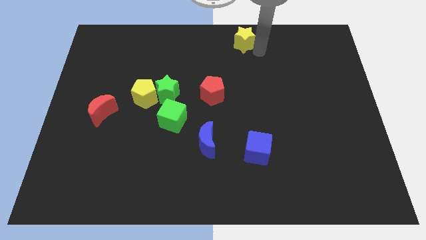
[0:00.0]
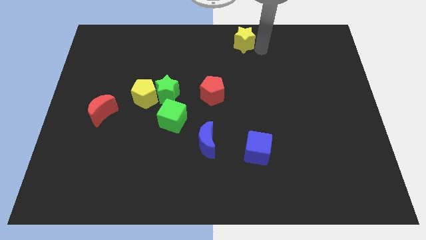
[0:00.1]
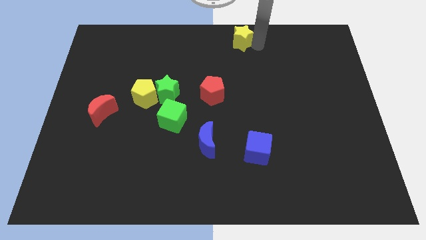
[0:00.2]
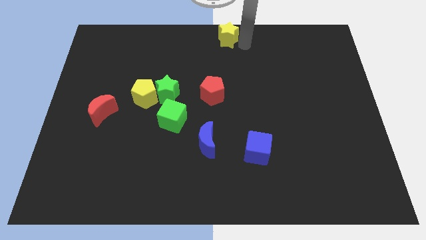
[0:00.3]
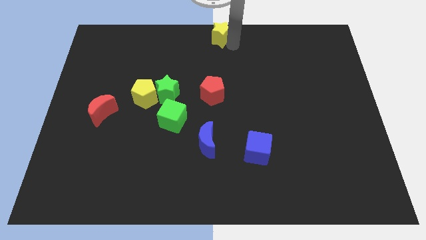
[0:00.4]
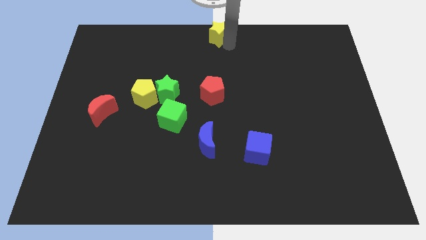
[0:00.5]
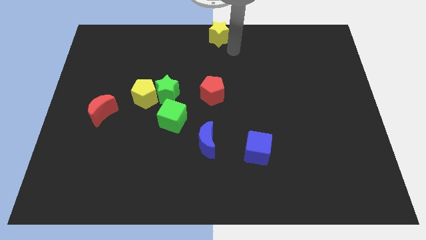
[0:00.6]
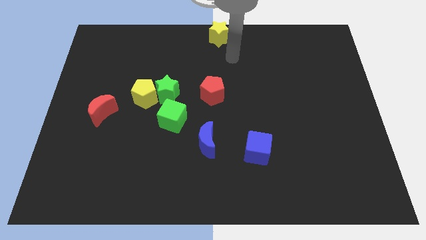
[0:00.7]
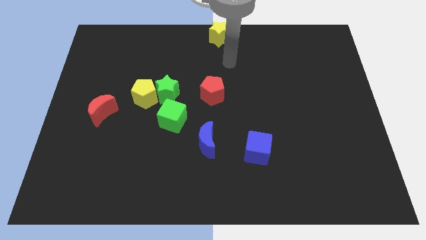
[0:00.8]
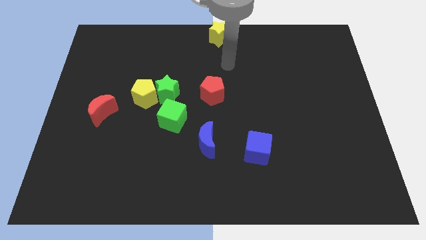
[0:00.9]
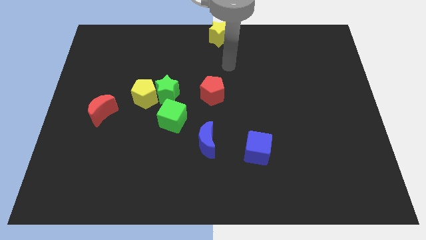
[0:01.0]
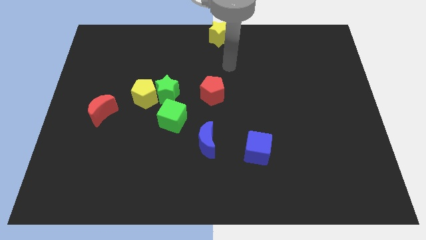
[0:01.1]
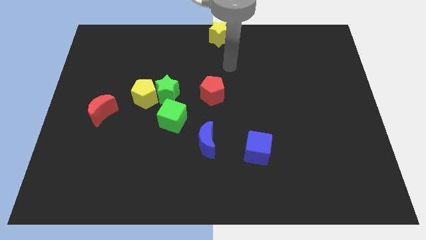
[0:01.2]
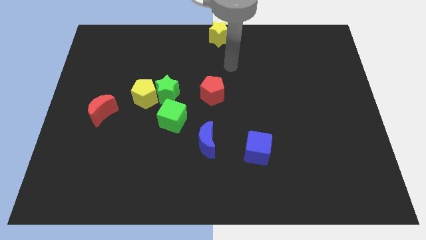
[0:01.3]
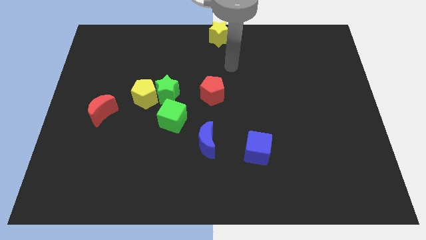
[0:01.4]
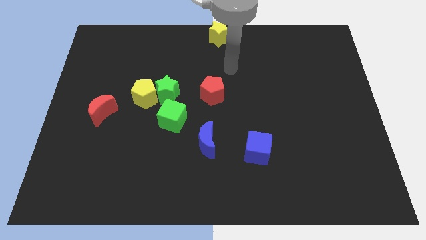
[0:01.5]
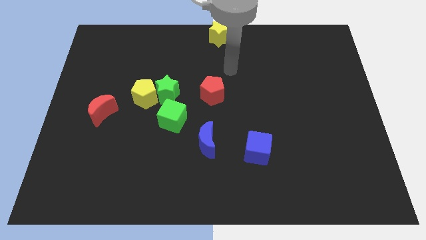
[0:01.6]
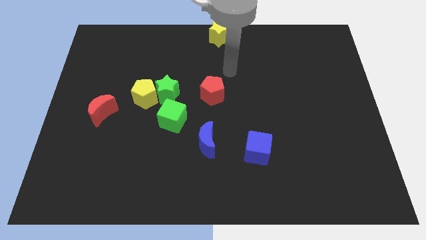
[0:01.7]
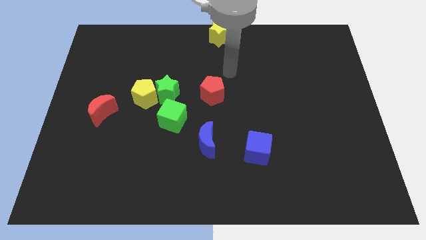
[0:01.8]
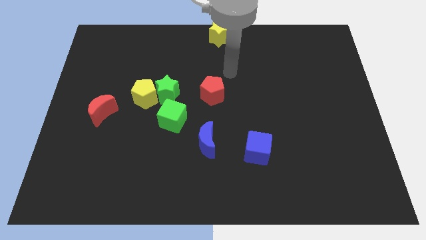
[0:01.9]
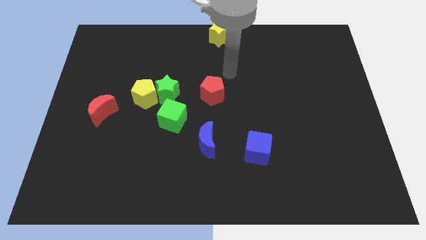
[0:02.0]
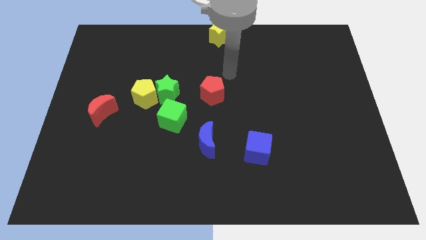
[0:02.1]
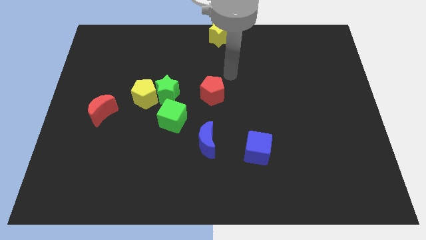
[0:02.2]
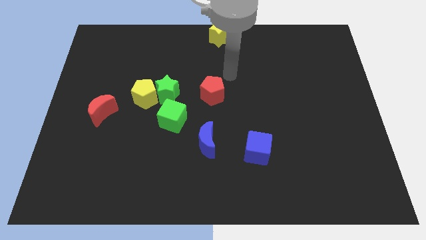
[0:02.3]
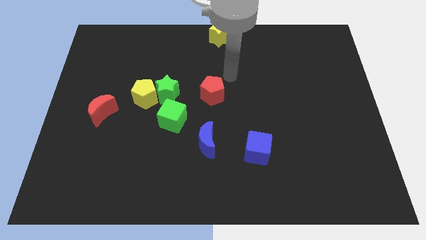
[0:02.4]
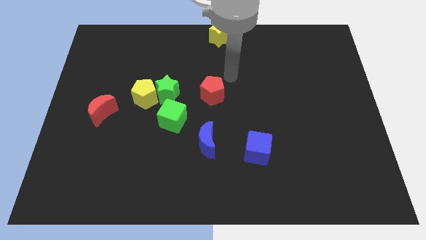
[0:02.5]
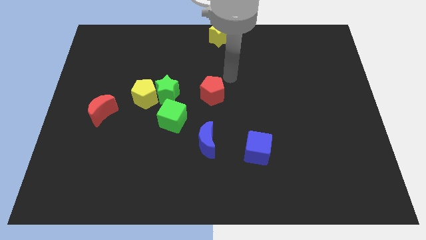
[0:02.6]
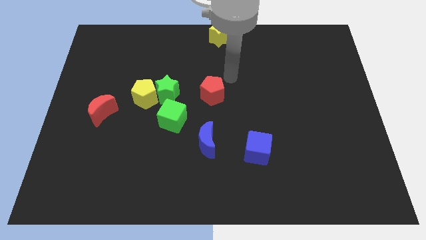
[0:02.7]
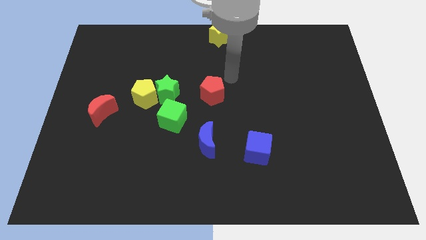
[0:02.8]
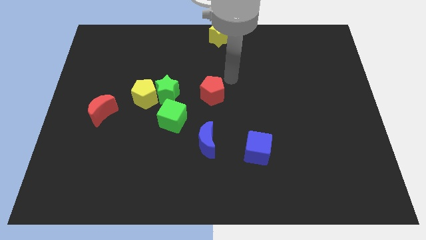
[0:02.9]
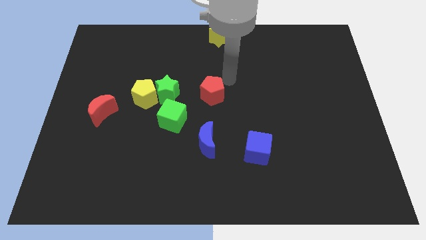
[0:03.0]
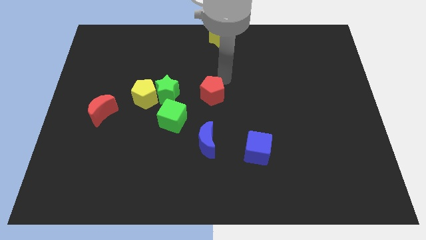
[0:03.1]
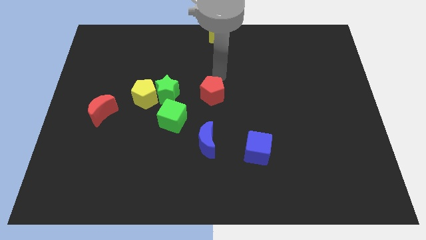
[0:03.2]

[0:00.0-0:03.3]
push yellow star towards its left

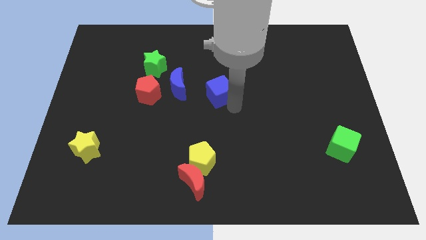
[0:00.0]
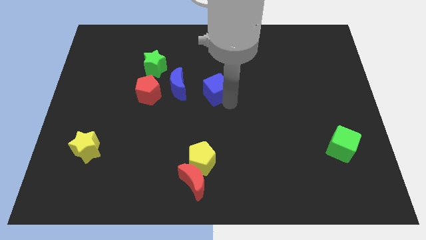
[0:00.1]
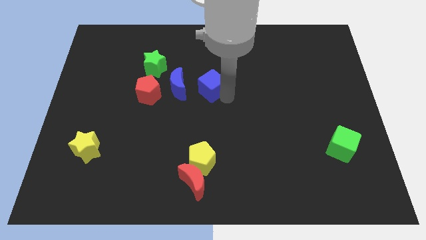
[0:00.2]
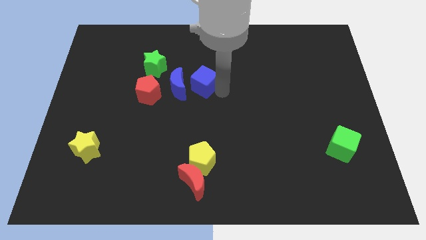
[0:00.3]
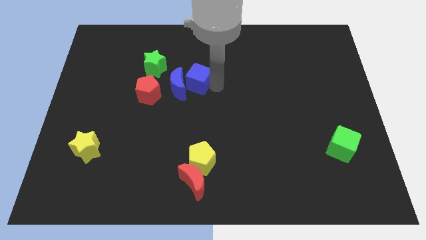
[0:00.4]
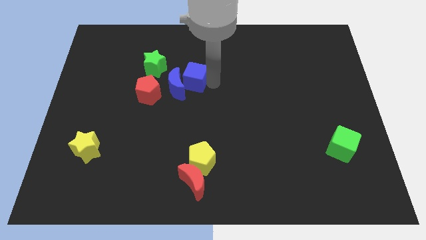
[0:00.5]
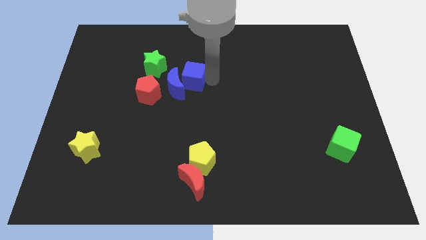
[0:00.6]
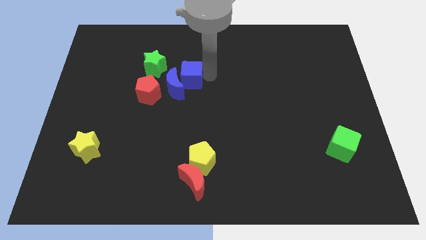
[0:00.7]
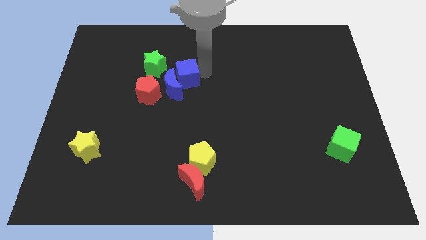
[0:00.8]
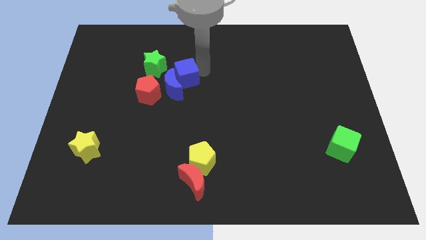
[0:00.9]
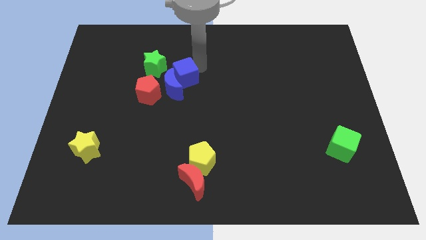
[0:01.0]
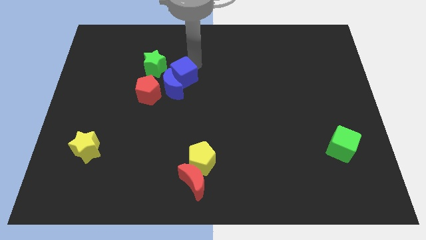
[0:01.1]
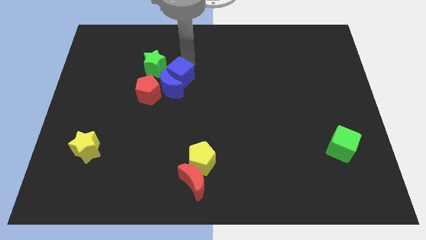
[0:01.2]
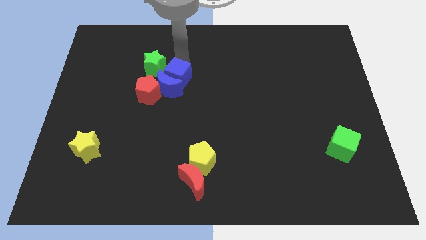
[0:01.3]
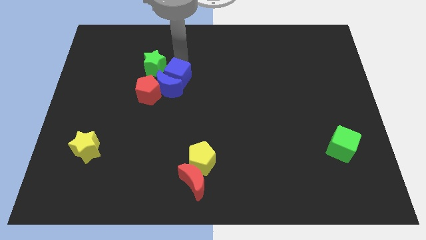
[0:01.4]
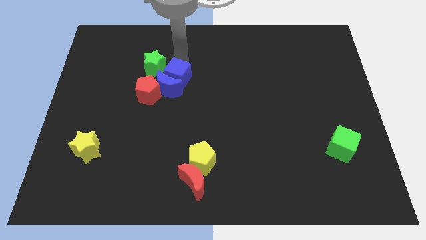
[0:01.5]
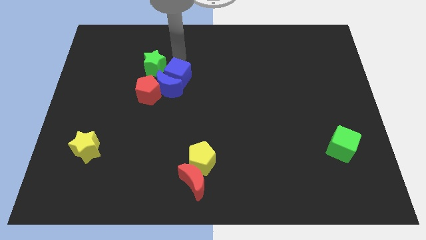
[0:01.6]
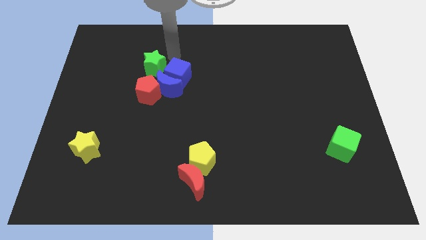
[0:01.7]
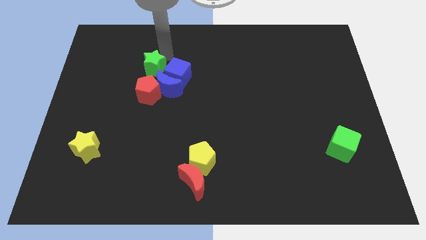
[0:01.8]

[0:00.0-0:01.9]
place the blue cube on top of blue moon

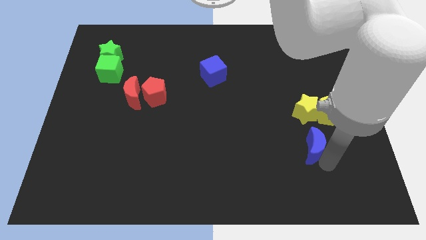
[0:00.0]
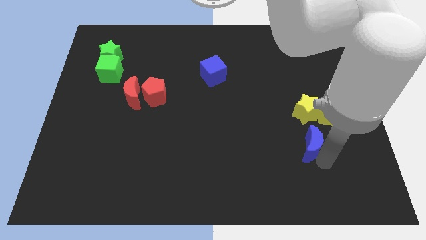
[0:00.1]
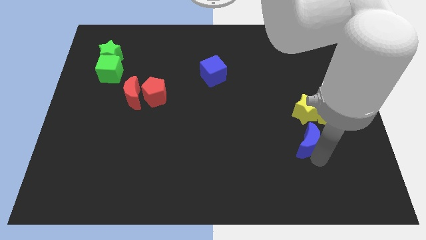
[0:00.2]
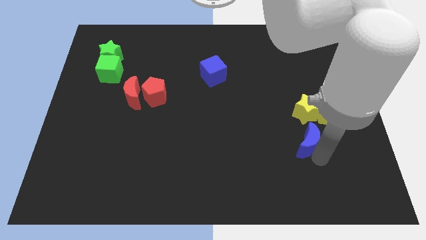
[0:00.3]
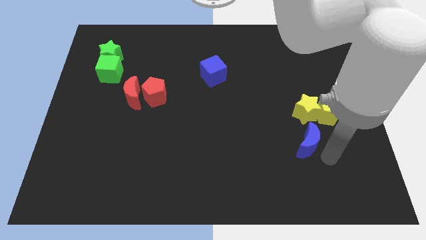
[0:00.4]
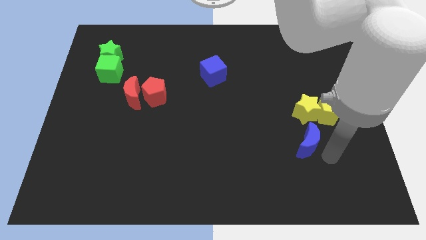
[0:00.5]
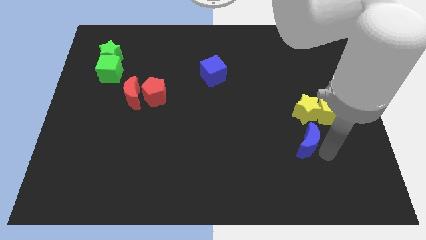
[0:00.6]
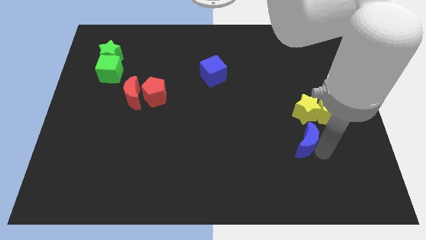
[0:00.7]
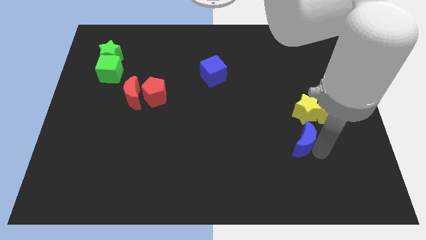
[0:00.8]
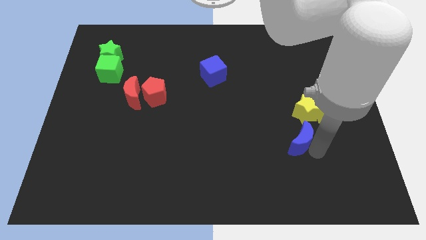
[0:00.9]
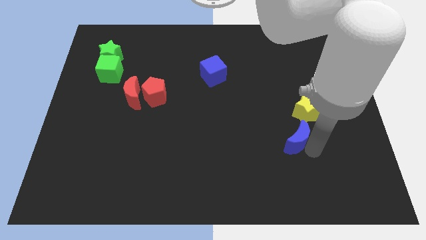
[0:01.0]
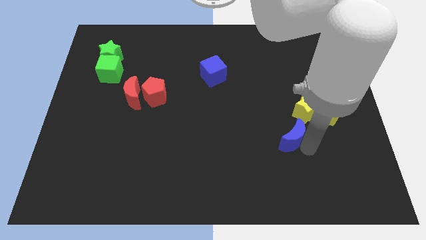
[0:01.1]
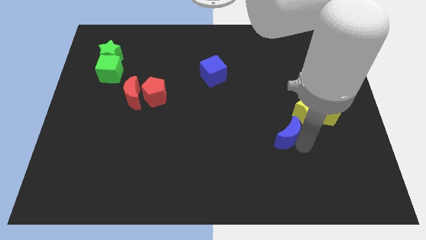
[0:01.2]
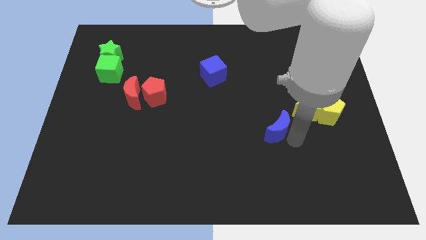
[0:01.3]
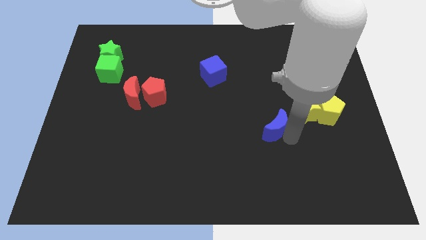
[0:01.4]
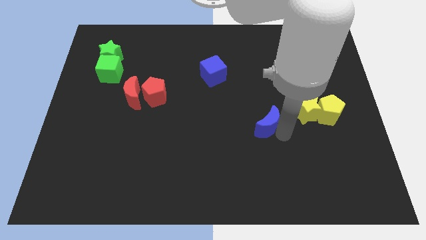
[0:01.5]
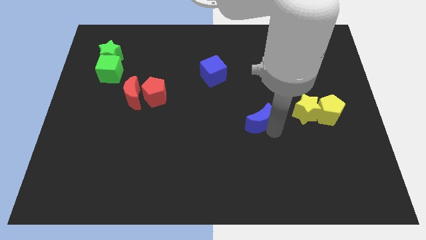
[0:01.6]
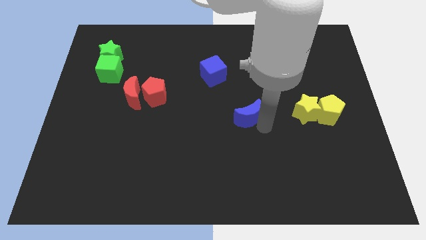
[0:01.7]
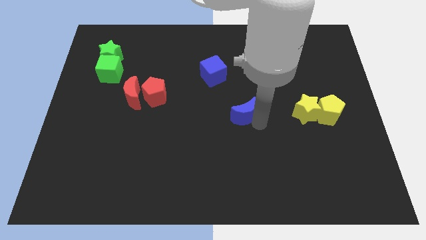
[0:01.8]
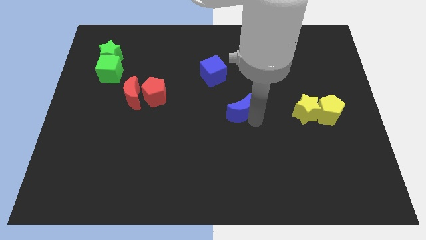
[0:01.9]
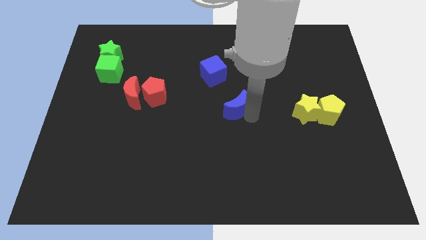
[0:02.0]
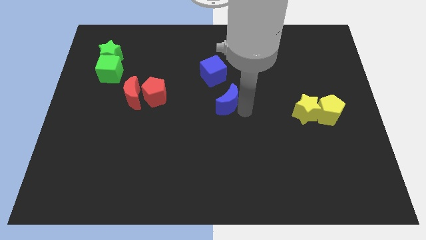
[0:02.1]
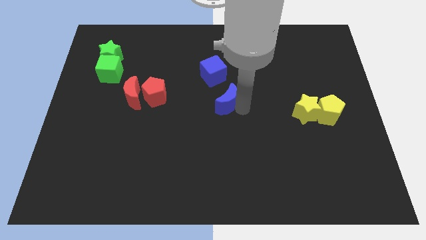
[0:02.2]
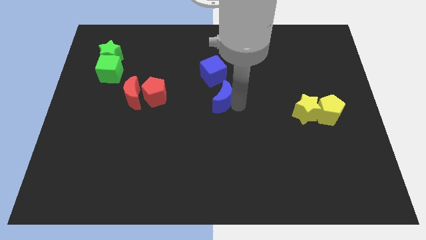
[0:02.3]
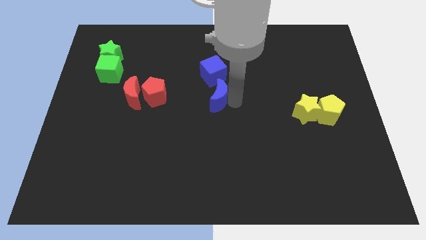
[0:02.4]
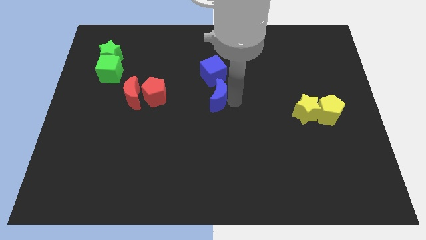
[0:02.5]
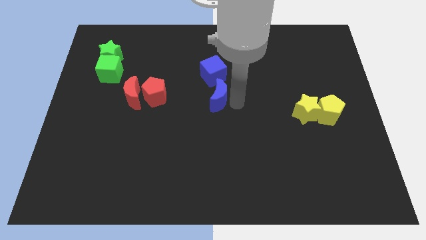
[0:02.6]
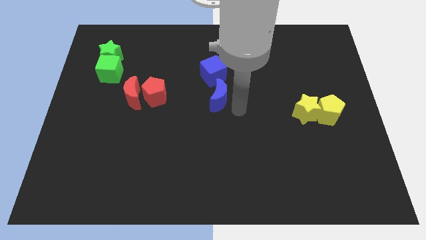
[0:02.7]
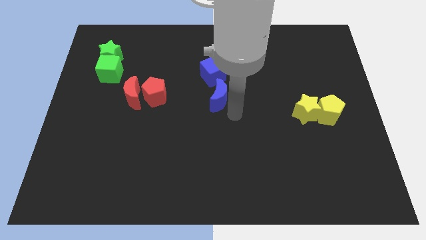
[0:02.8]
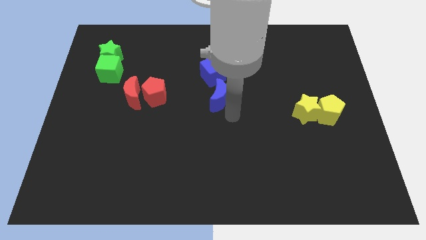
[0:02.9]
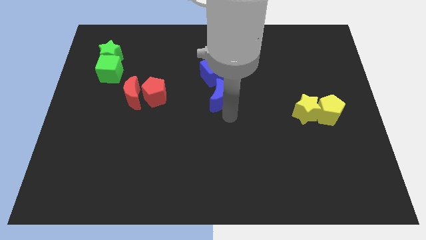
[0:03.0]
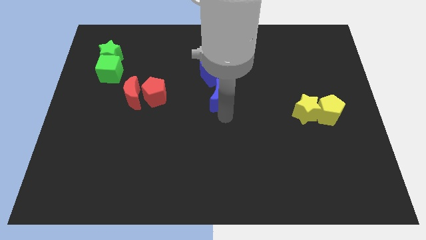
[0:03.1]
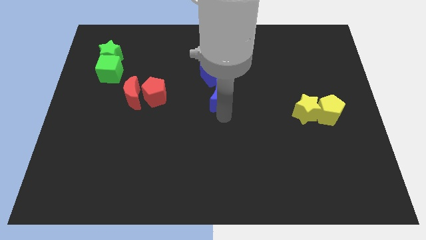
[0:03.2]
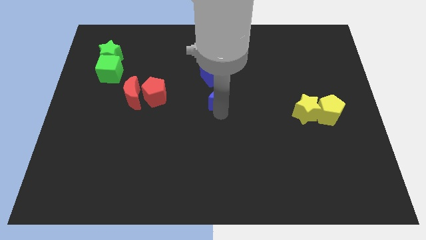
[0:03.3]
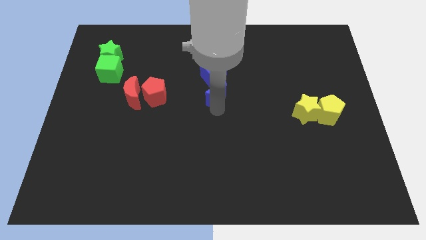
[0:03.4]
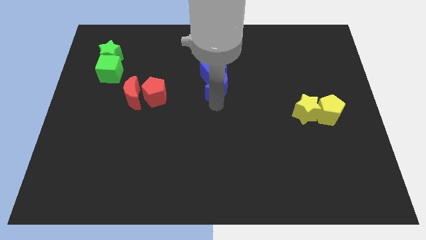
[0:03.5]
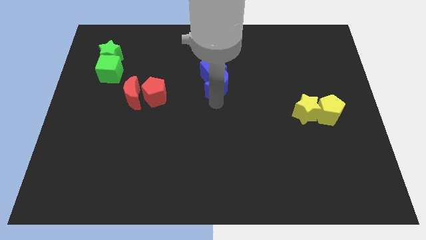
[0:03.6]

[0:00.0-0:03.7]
move the blue crescent into the blue cube
